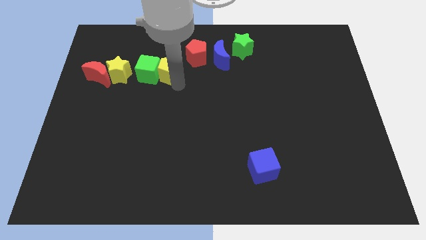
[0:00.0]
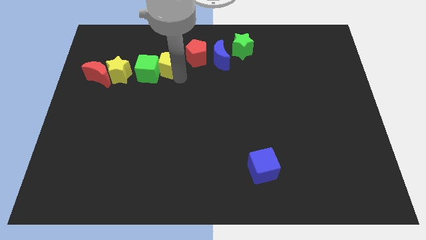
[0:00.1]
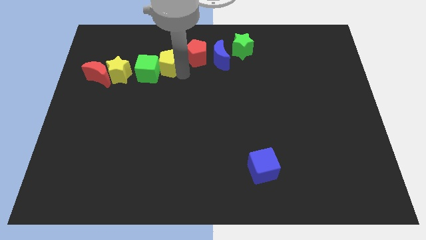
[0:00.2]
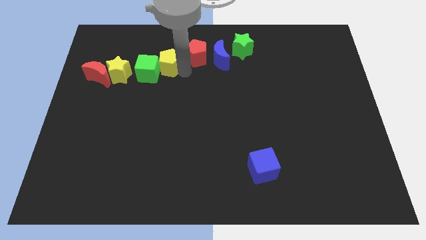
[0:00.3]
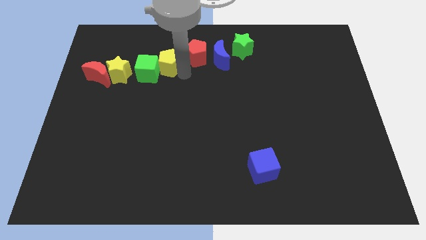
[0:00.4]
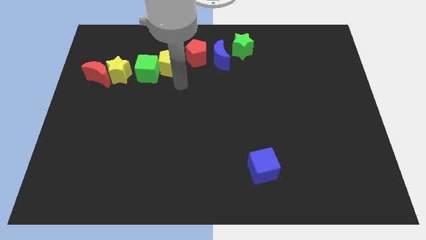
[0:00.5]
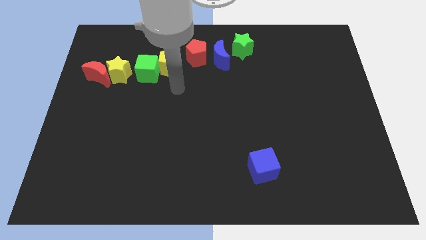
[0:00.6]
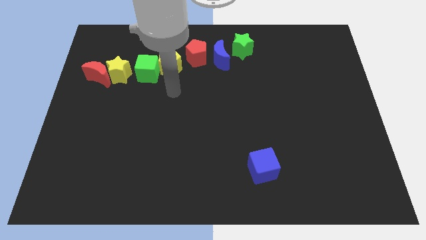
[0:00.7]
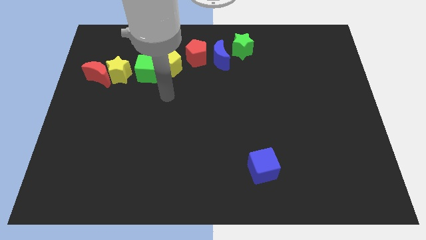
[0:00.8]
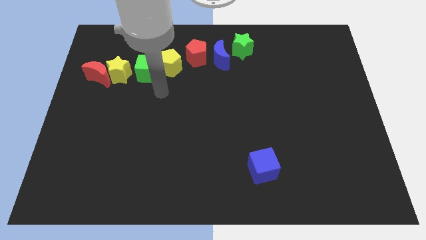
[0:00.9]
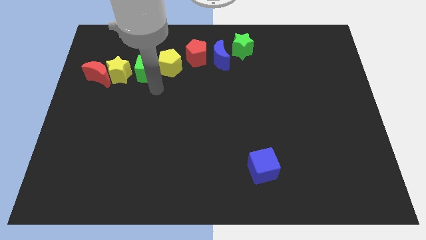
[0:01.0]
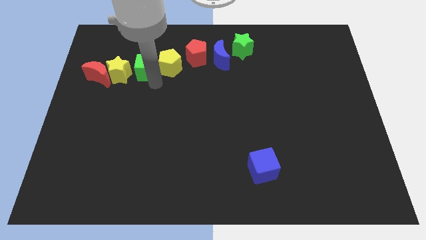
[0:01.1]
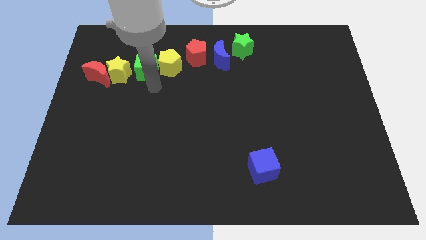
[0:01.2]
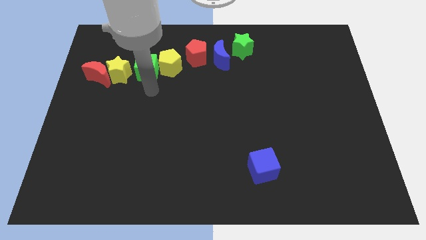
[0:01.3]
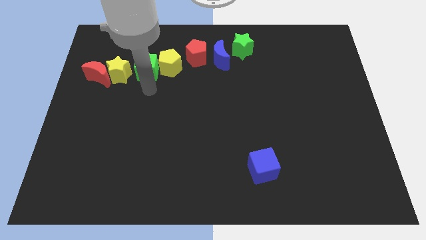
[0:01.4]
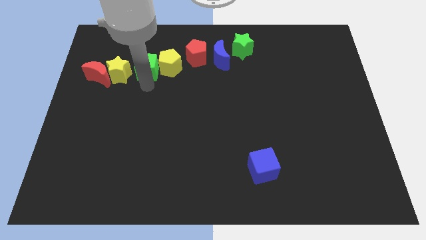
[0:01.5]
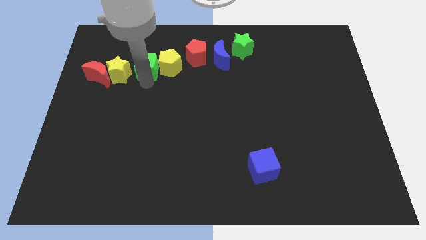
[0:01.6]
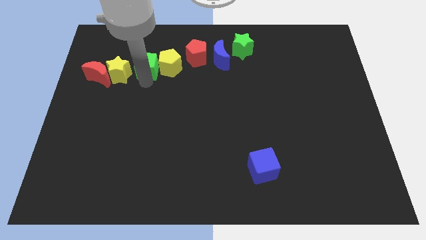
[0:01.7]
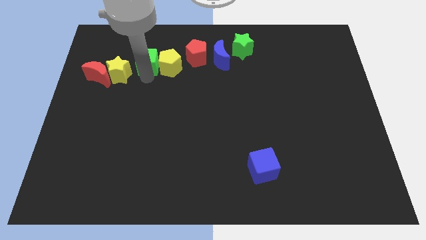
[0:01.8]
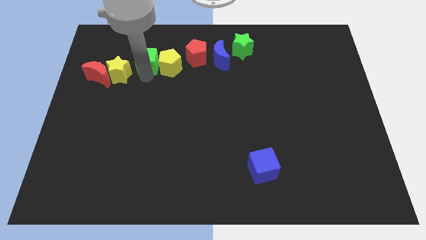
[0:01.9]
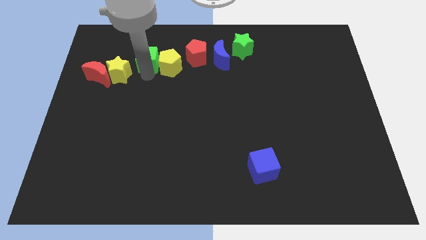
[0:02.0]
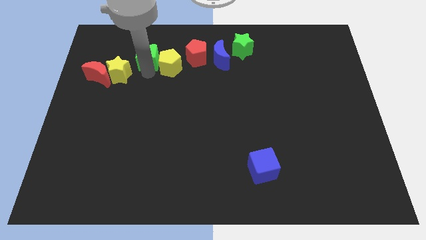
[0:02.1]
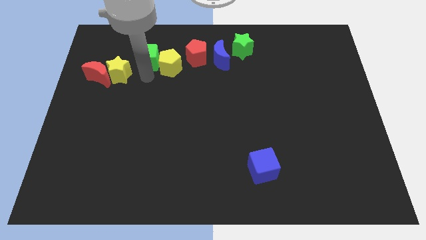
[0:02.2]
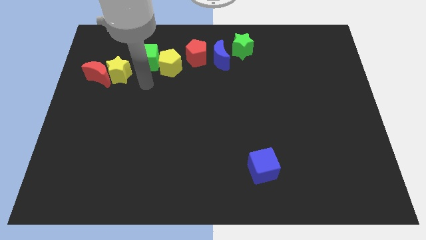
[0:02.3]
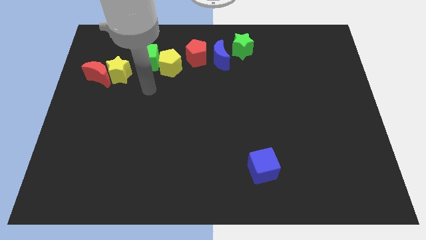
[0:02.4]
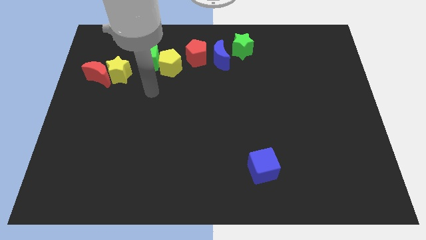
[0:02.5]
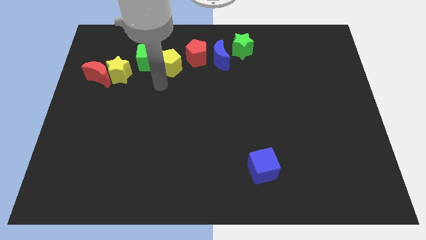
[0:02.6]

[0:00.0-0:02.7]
slightly push the green cube upward

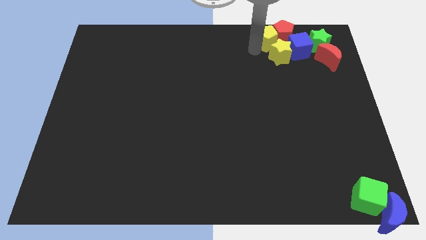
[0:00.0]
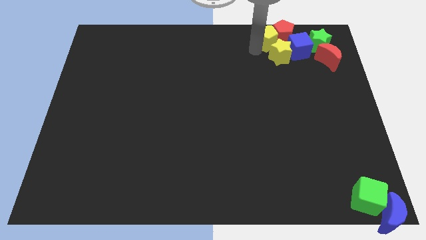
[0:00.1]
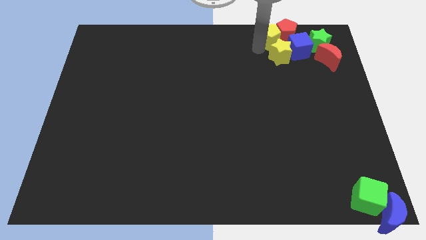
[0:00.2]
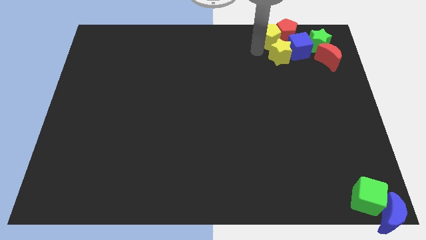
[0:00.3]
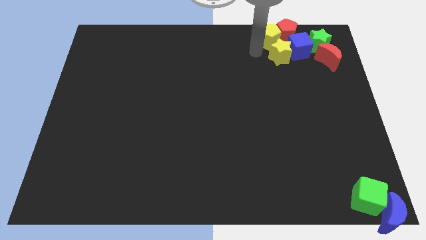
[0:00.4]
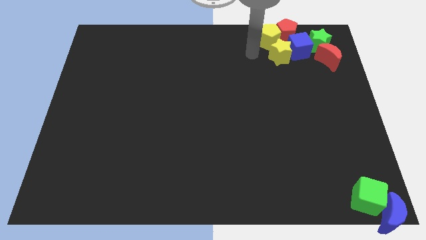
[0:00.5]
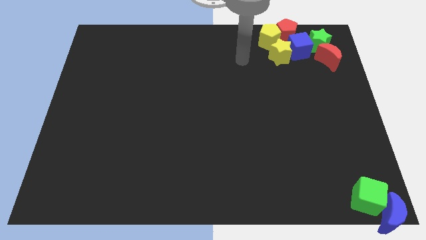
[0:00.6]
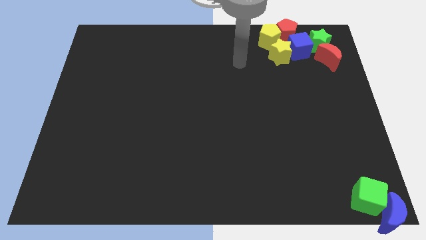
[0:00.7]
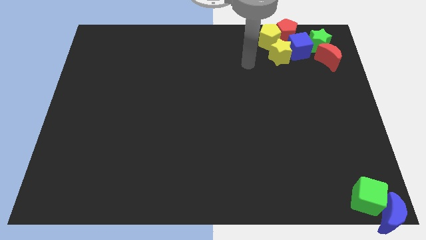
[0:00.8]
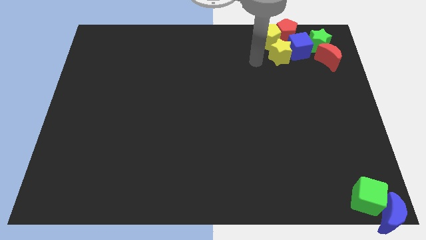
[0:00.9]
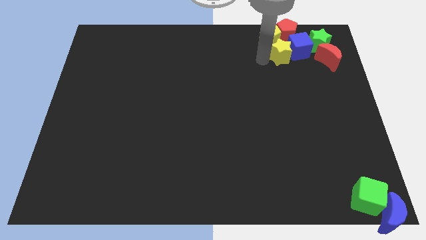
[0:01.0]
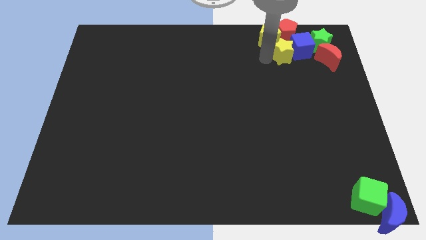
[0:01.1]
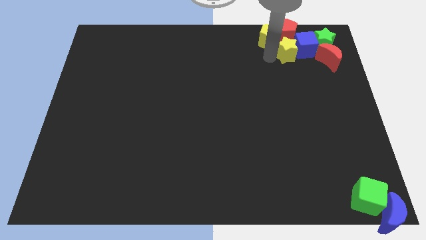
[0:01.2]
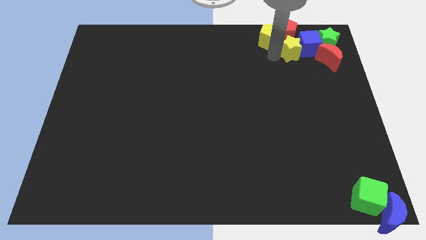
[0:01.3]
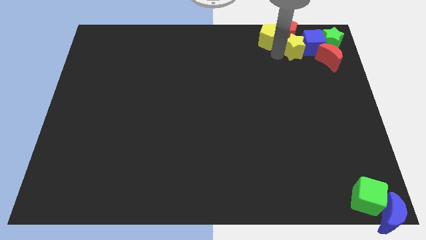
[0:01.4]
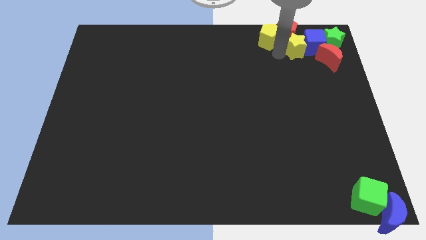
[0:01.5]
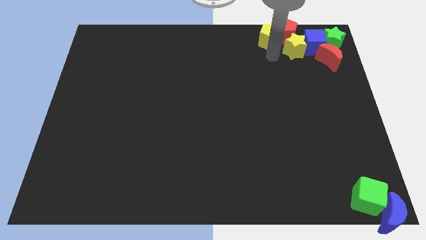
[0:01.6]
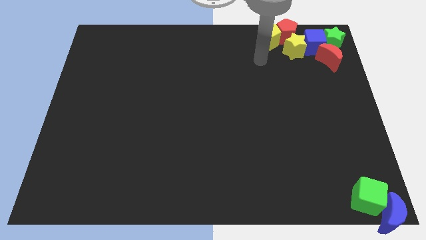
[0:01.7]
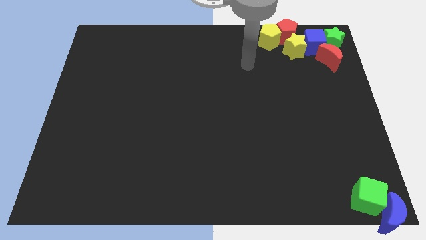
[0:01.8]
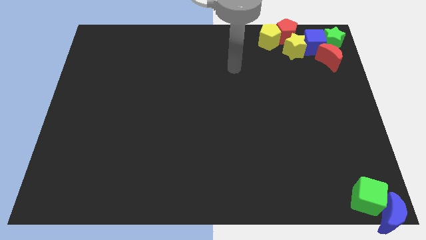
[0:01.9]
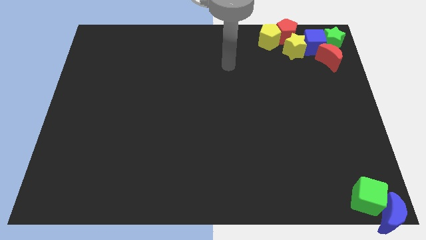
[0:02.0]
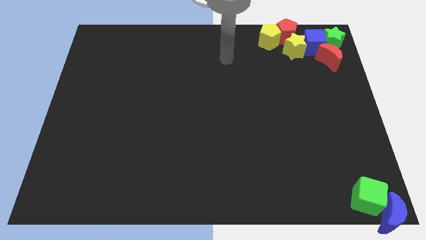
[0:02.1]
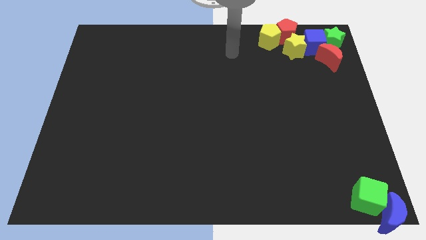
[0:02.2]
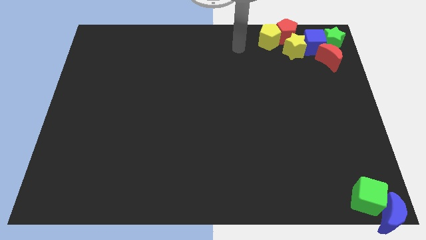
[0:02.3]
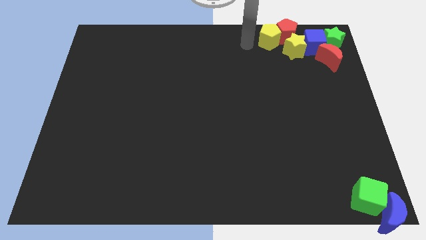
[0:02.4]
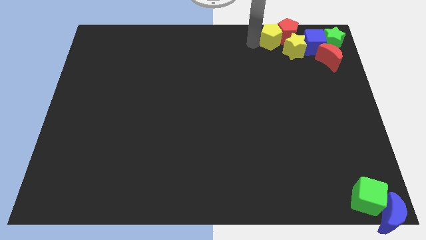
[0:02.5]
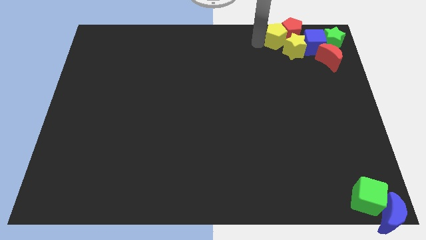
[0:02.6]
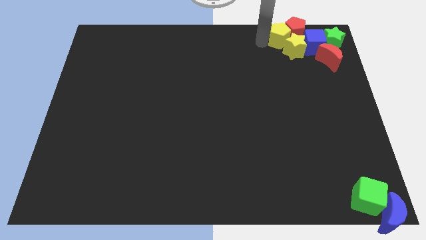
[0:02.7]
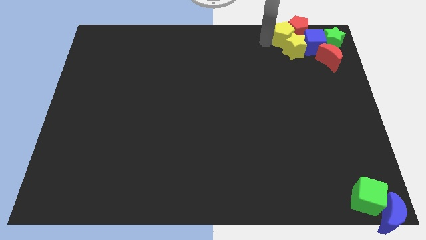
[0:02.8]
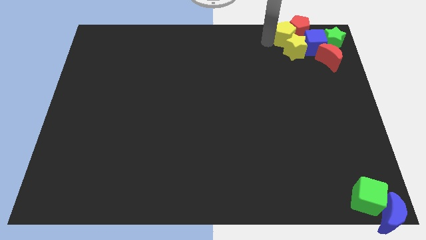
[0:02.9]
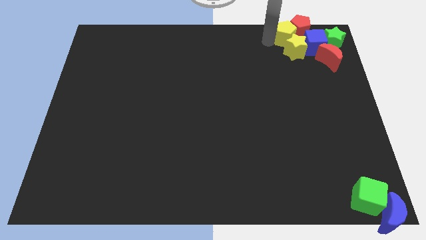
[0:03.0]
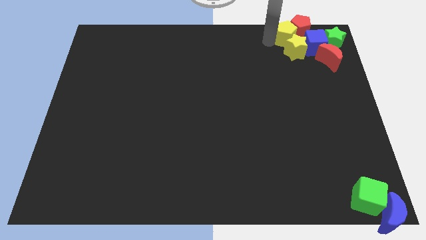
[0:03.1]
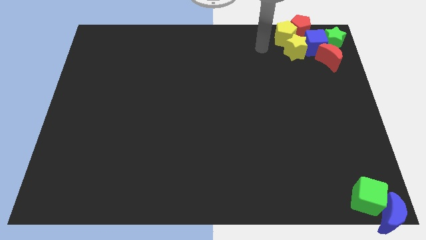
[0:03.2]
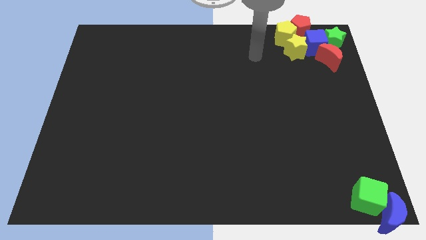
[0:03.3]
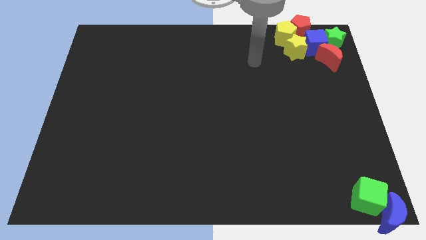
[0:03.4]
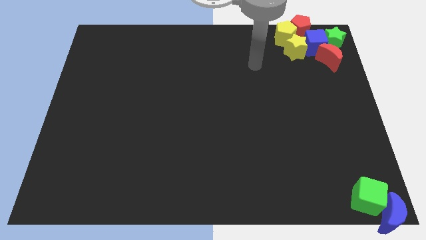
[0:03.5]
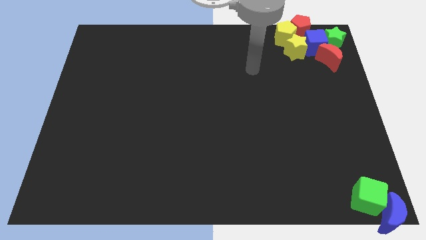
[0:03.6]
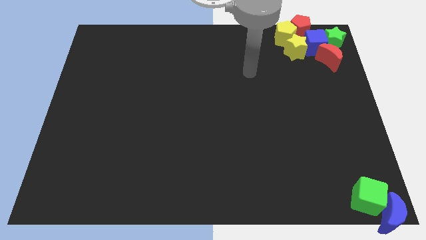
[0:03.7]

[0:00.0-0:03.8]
push yellow blocks red blocks blue cube and green star to the top right corner of the board

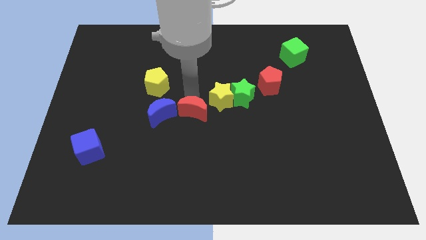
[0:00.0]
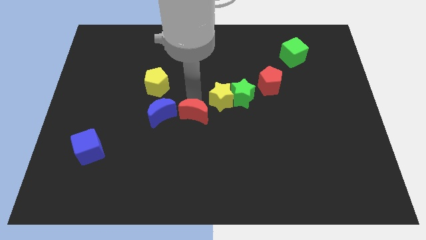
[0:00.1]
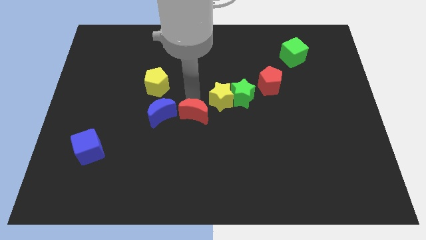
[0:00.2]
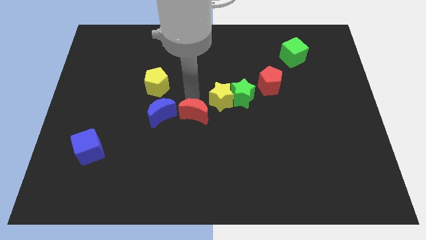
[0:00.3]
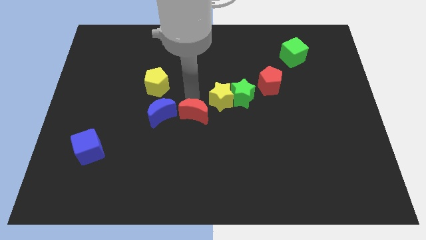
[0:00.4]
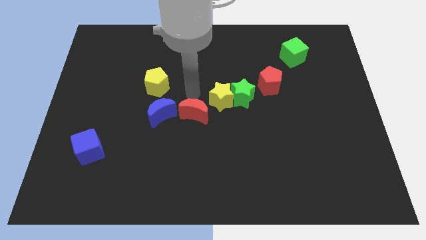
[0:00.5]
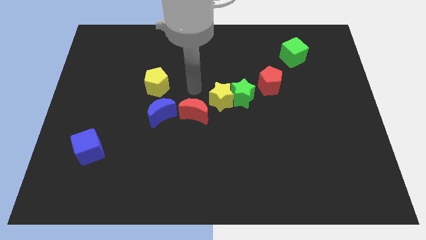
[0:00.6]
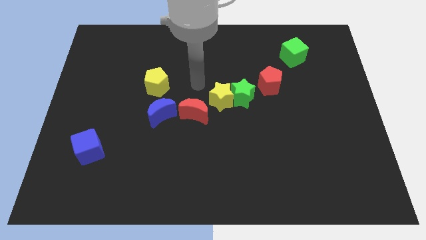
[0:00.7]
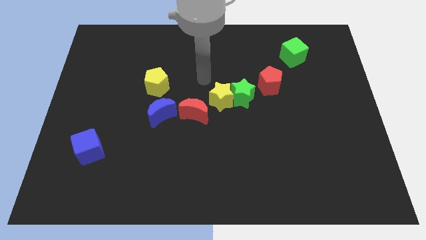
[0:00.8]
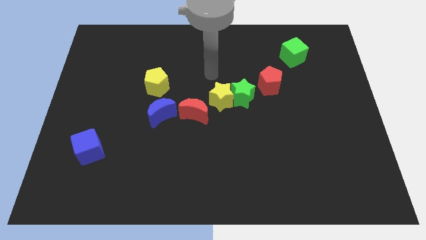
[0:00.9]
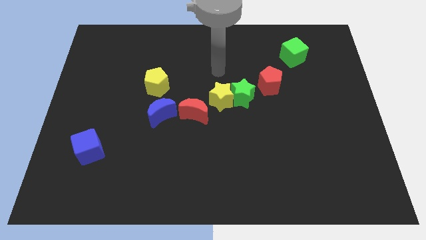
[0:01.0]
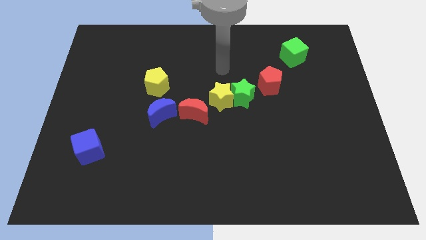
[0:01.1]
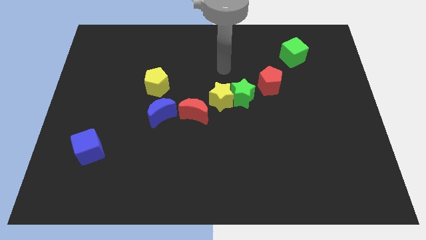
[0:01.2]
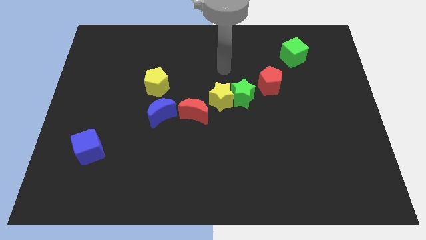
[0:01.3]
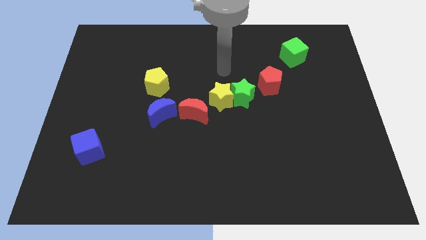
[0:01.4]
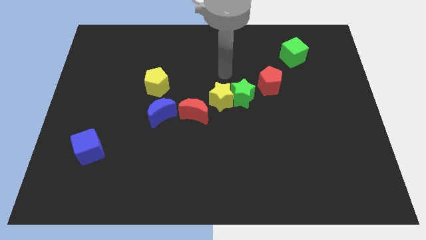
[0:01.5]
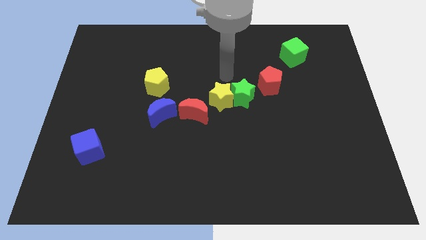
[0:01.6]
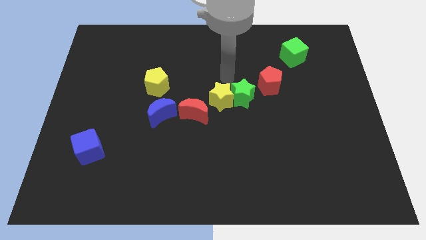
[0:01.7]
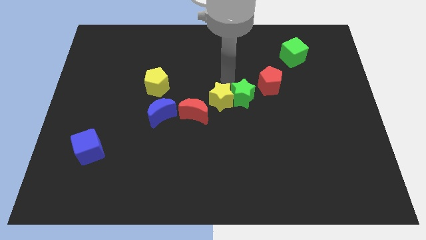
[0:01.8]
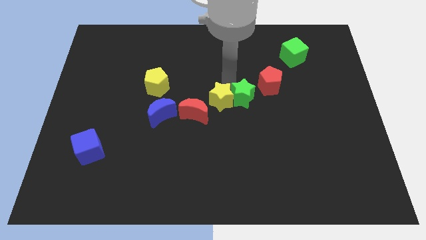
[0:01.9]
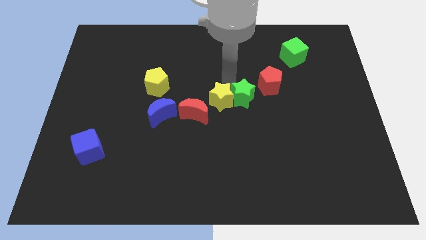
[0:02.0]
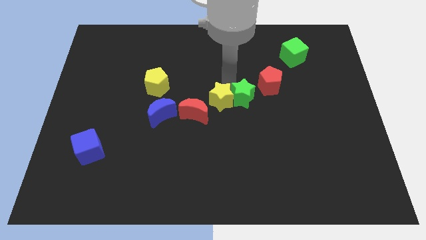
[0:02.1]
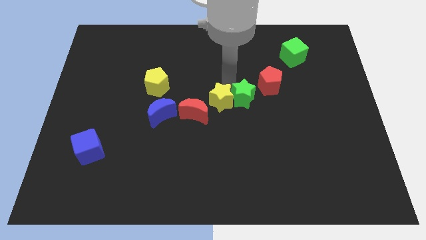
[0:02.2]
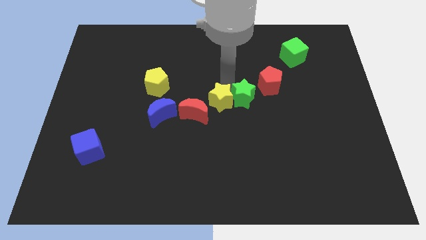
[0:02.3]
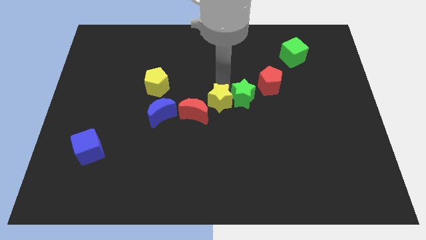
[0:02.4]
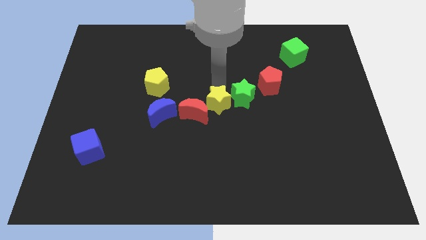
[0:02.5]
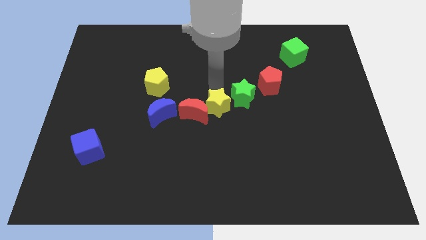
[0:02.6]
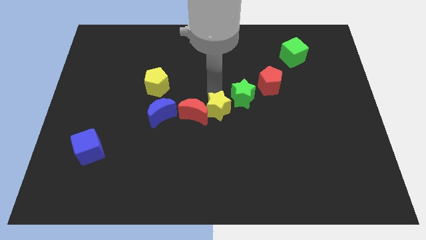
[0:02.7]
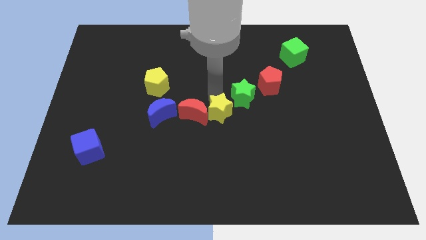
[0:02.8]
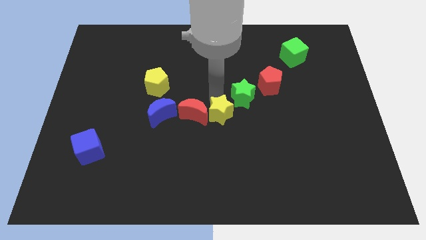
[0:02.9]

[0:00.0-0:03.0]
make the yellow star to touch the red crescent
